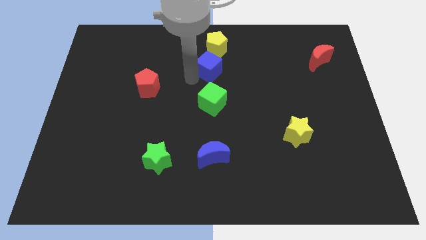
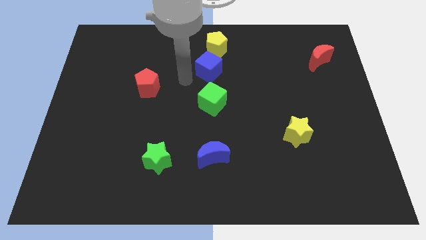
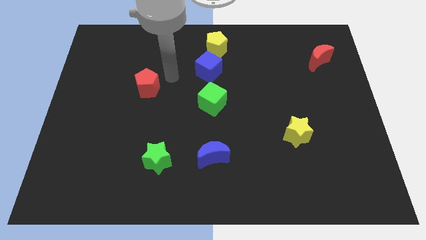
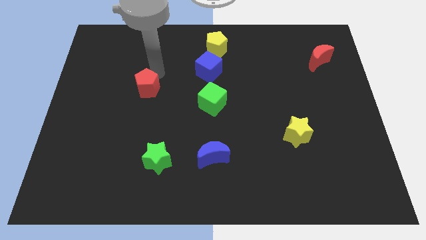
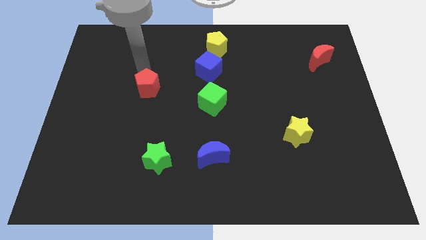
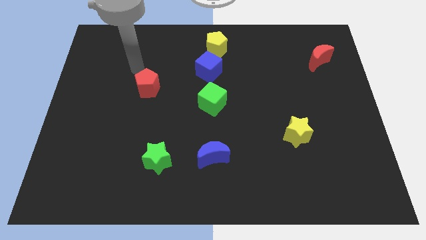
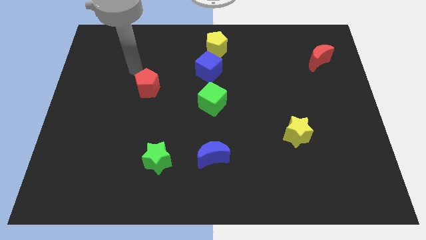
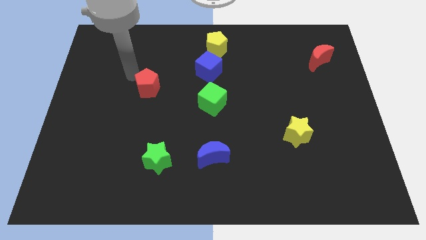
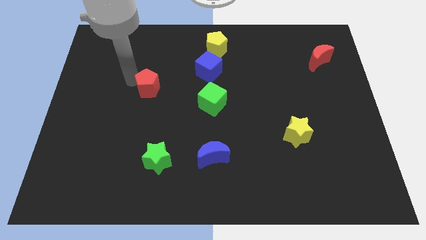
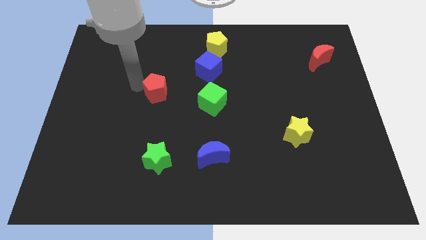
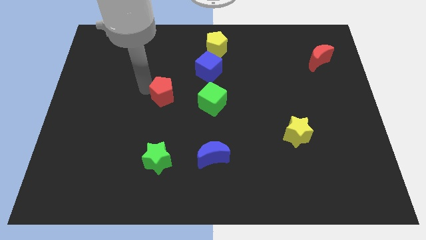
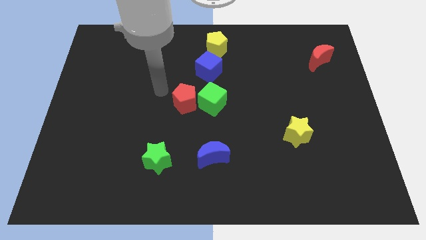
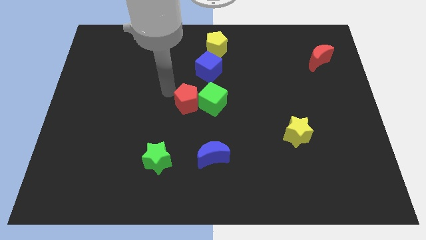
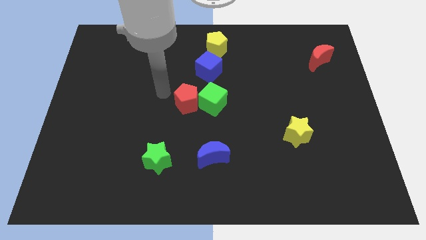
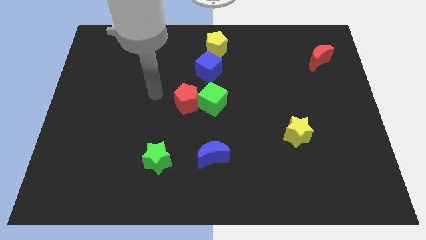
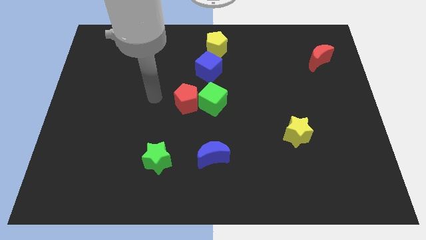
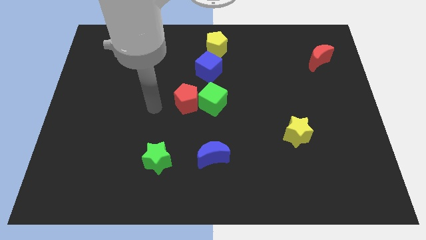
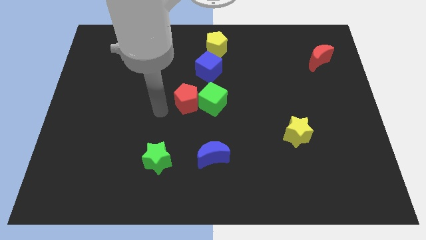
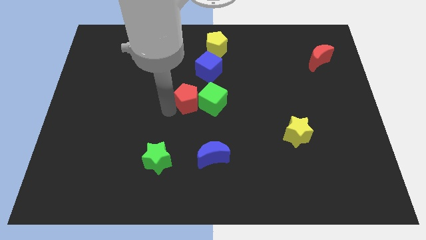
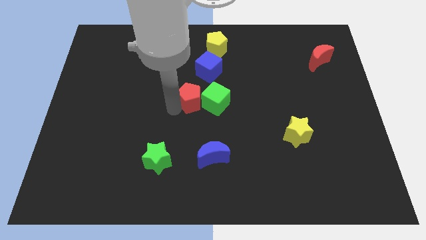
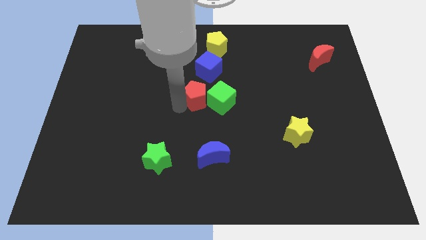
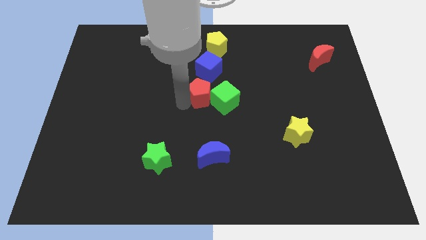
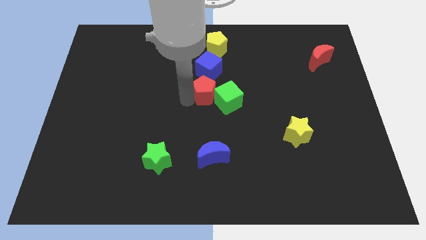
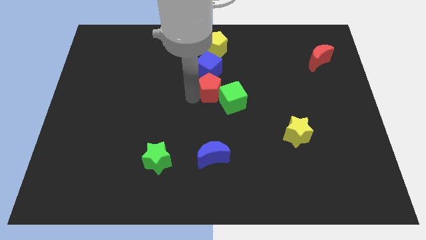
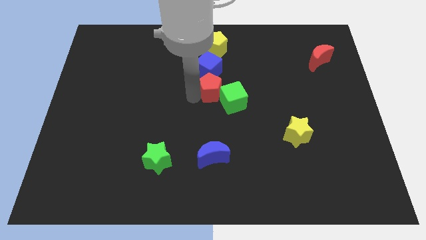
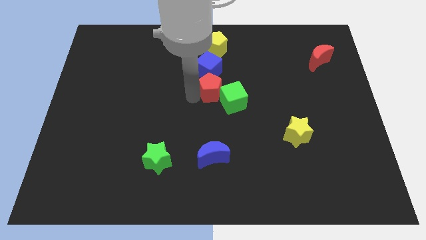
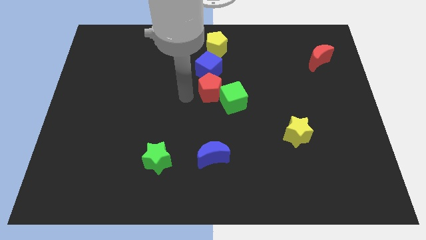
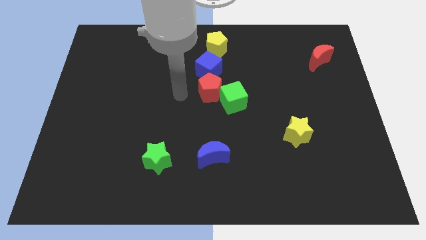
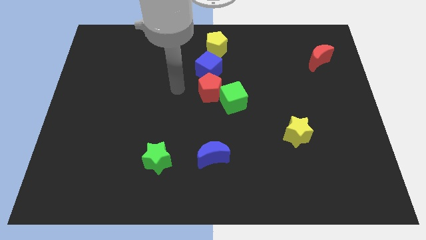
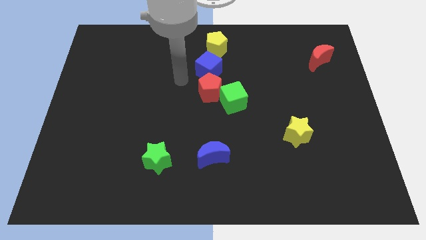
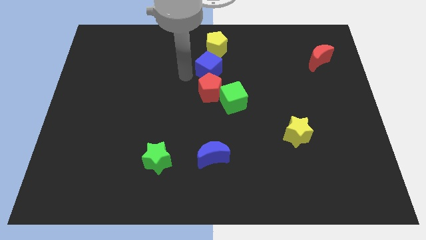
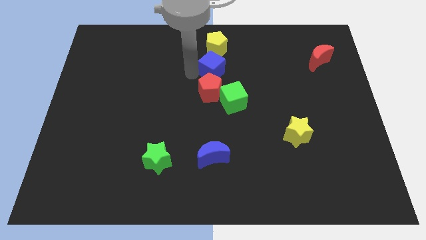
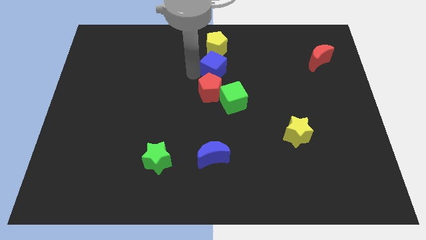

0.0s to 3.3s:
move the red pentagon to the bottom of the blue cube

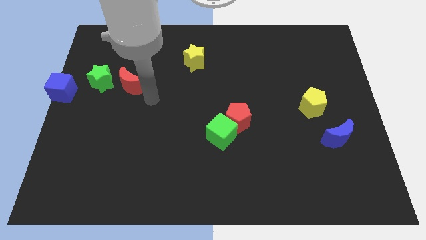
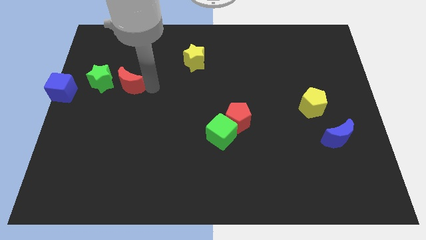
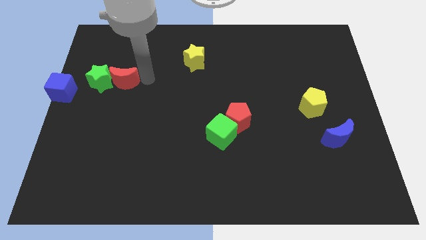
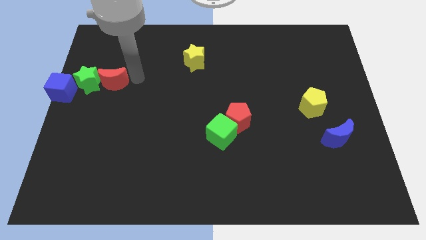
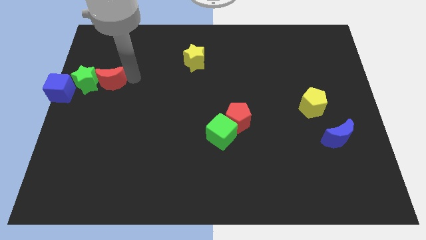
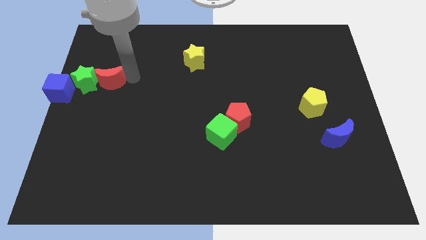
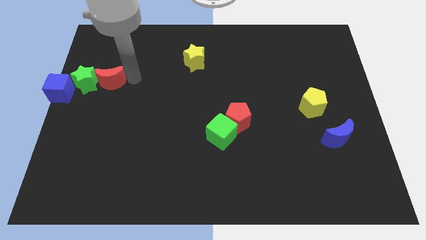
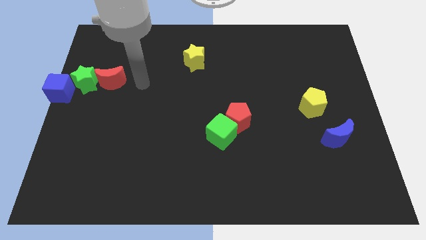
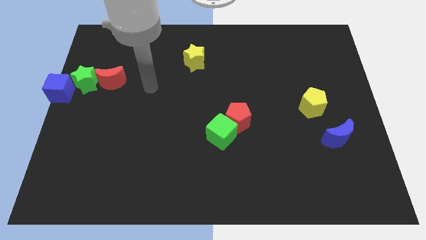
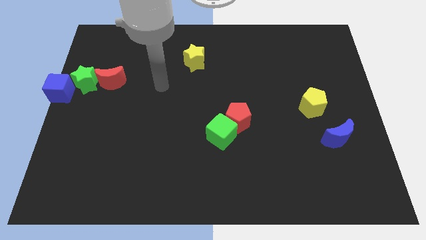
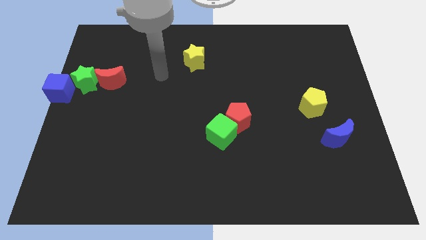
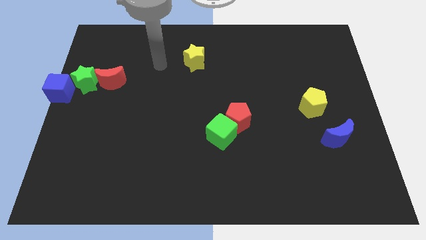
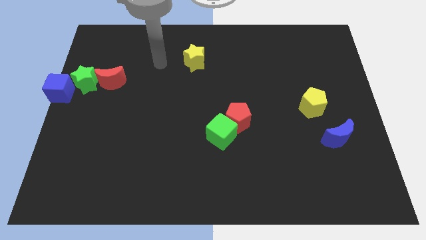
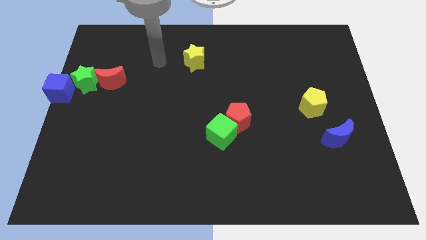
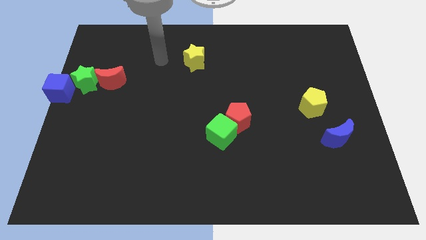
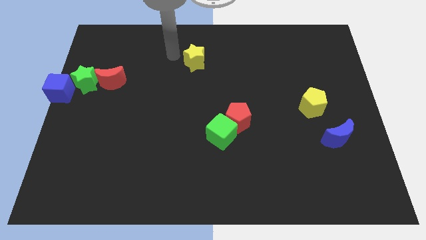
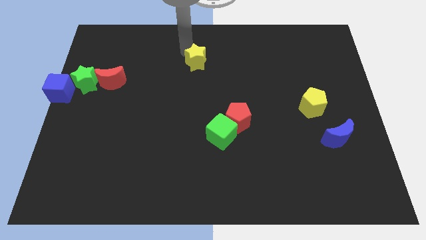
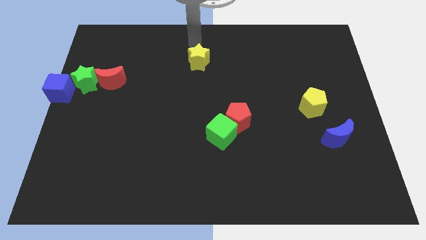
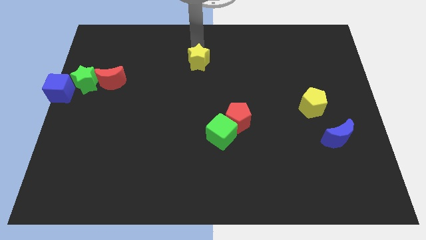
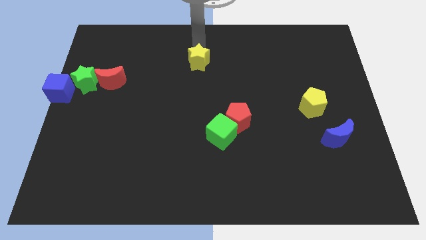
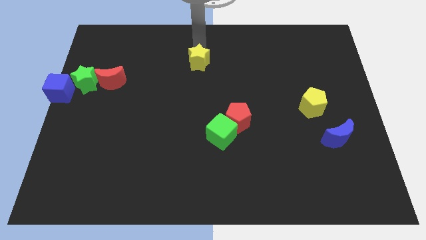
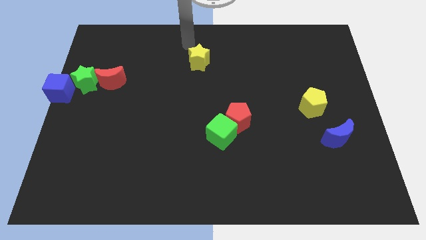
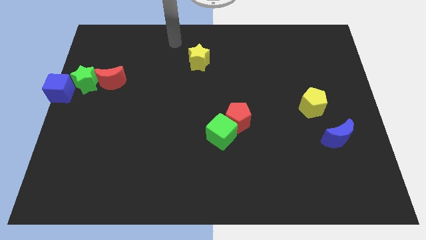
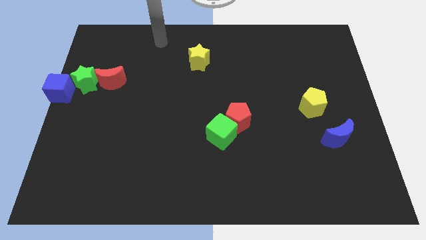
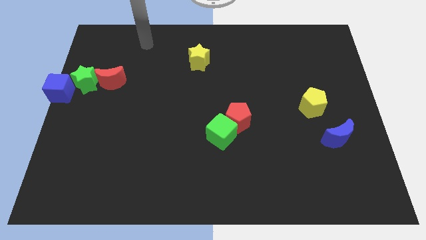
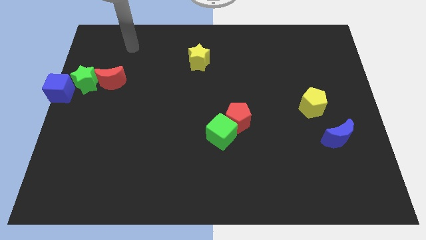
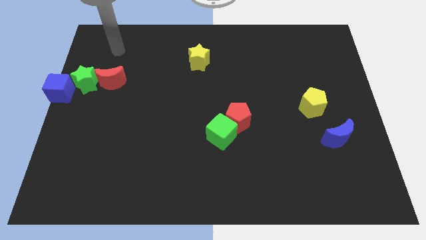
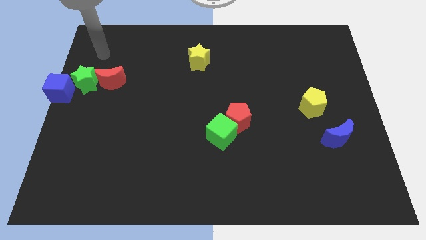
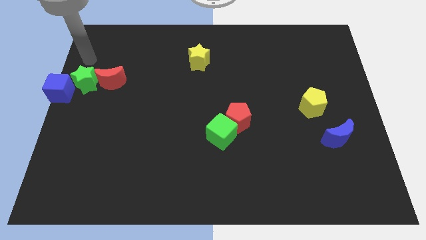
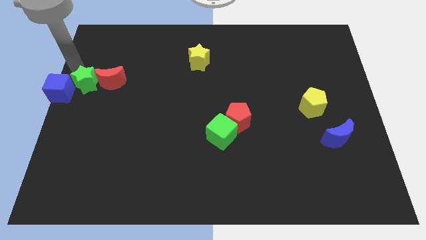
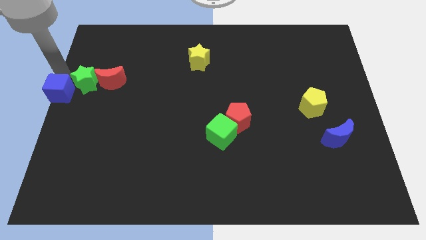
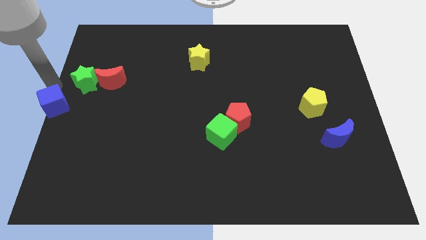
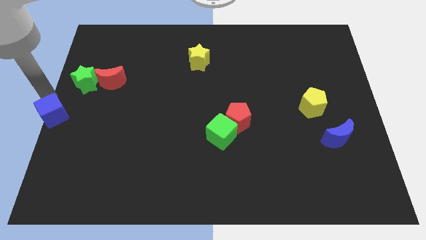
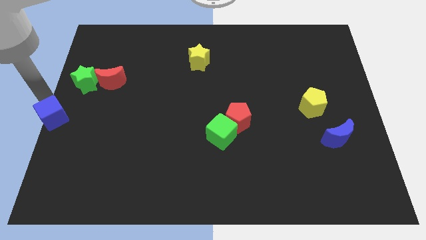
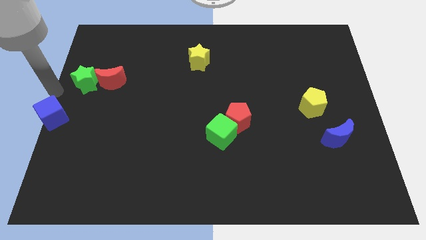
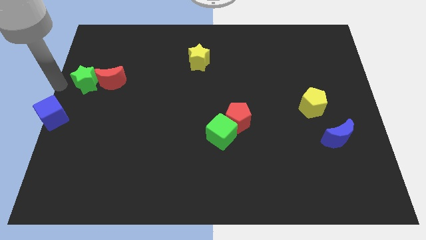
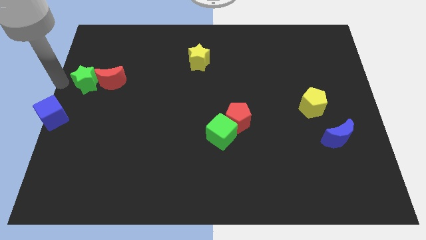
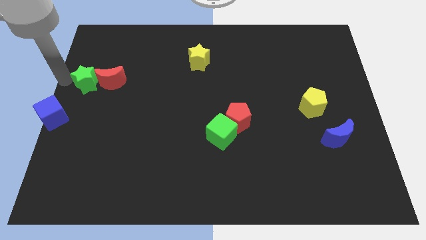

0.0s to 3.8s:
push blue cube downwards

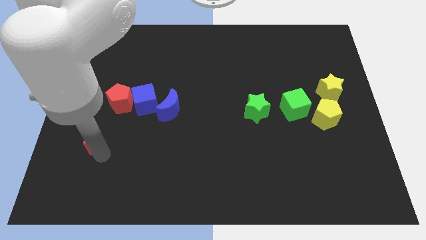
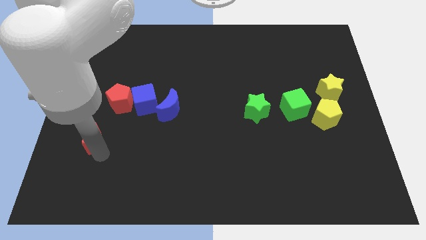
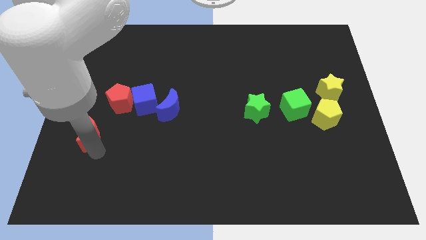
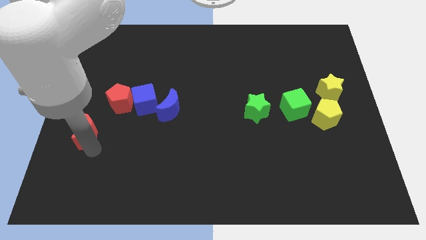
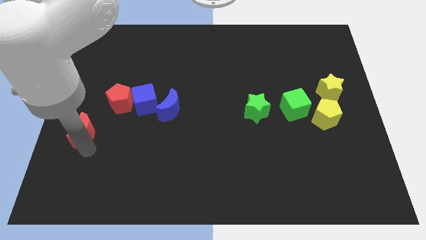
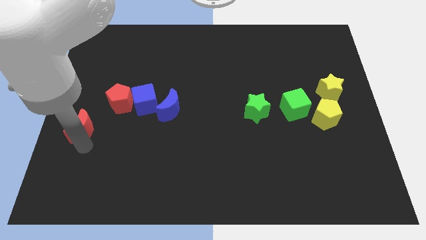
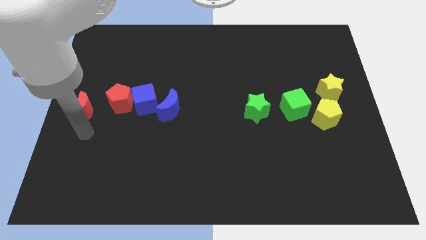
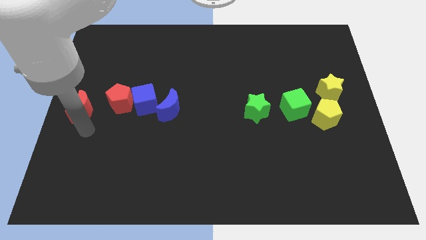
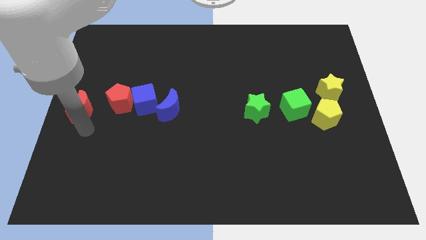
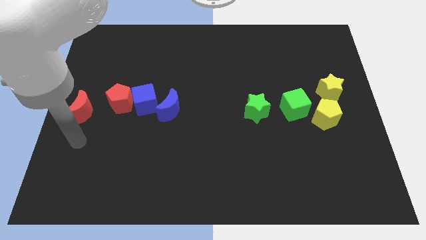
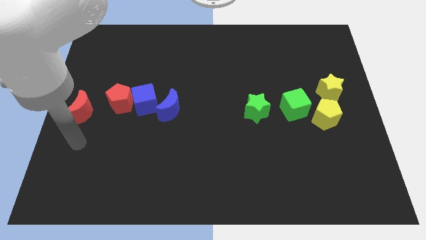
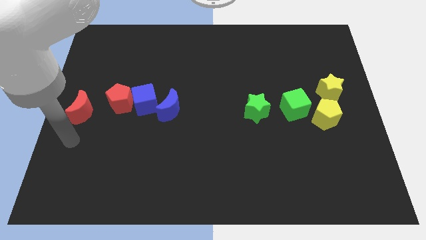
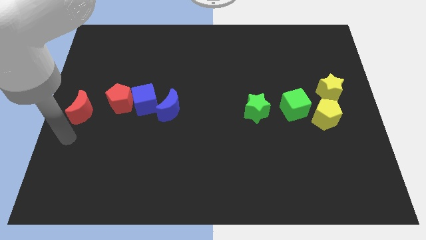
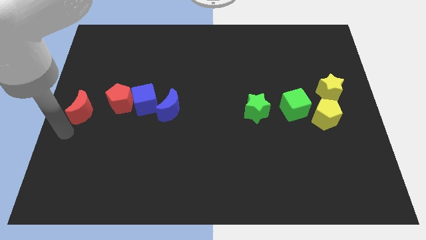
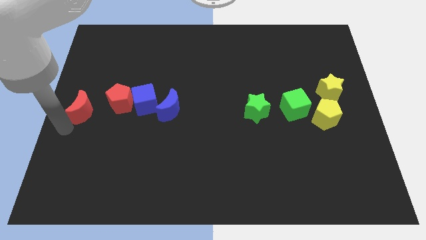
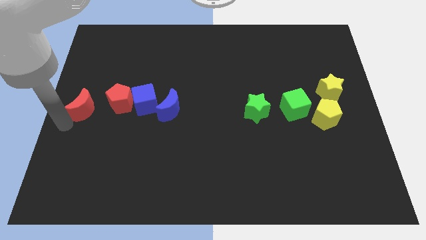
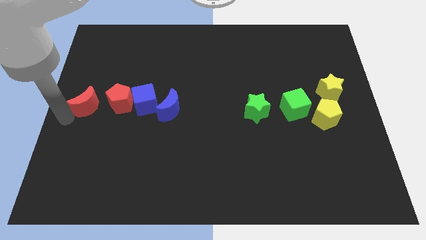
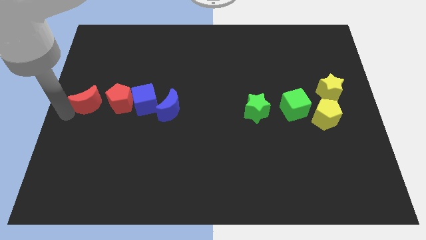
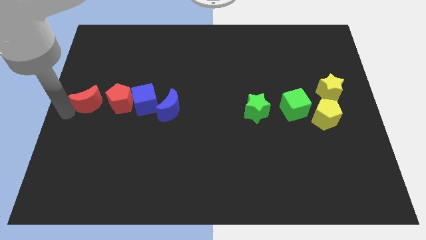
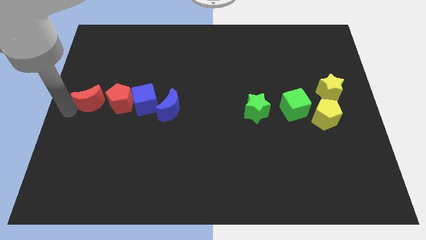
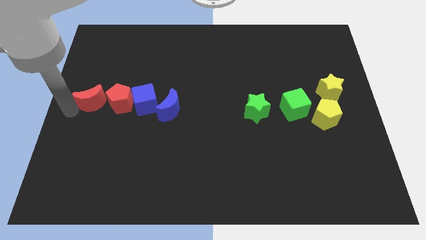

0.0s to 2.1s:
move red moon to left of red pentagon
